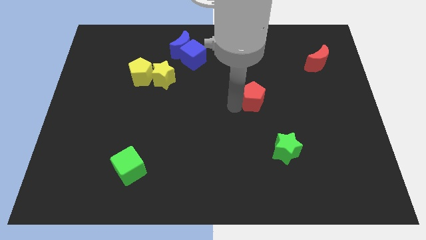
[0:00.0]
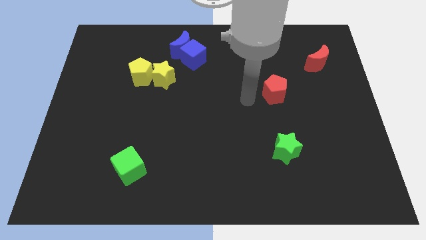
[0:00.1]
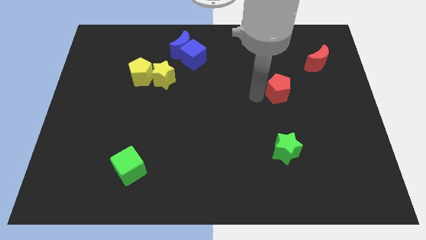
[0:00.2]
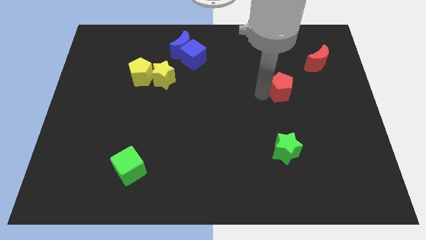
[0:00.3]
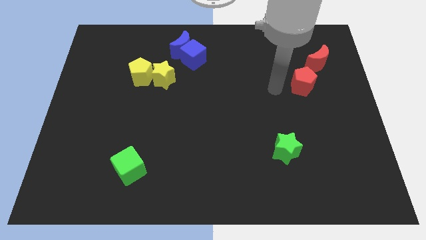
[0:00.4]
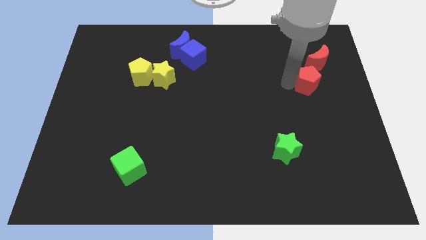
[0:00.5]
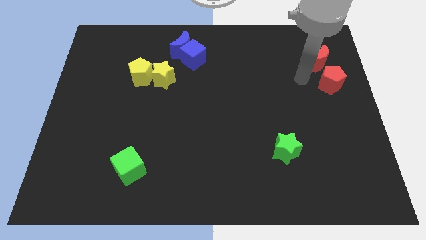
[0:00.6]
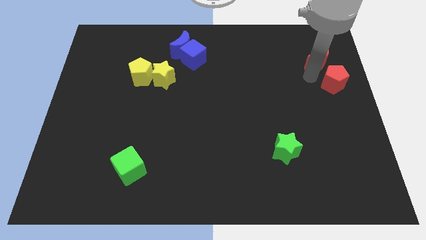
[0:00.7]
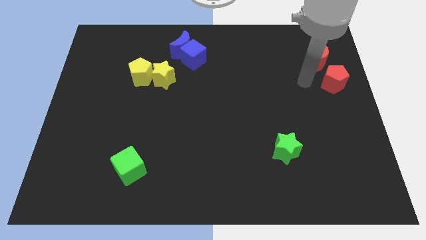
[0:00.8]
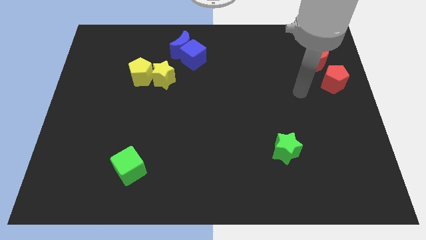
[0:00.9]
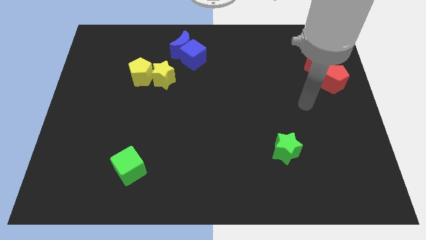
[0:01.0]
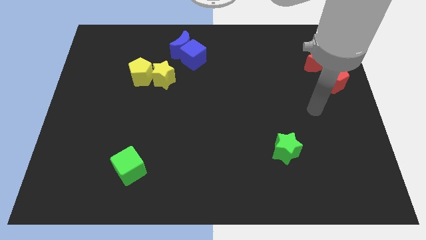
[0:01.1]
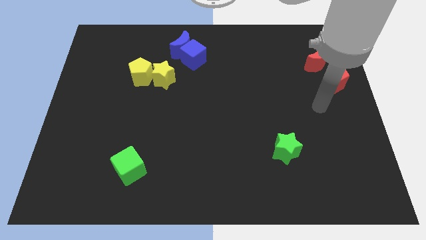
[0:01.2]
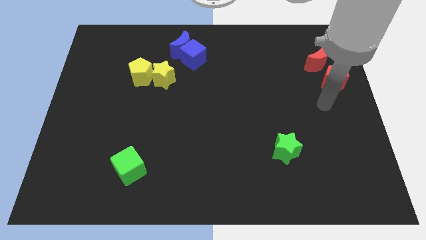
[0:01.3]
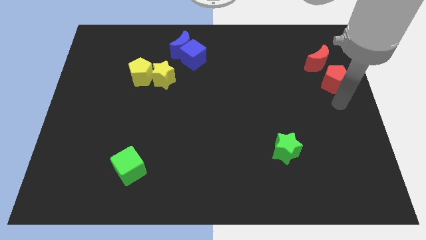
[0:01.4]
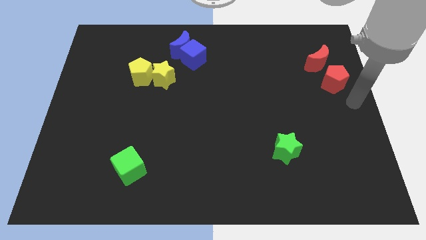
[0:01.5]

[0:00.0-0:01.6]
place the red pentagon below the red moon

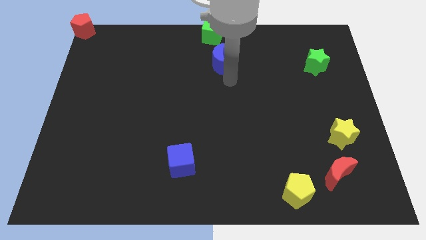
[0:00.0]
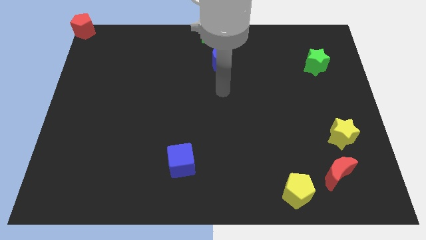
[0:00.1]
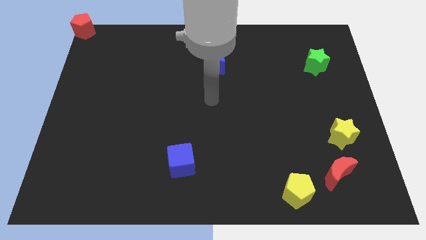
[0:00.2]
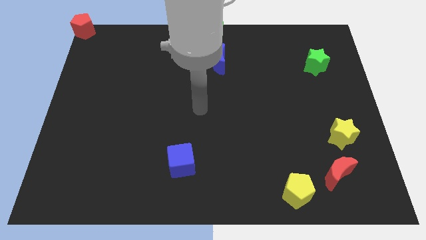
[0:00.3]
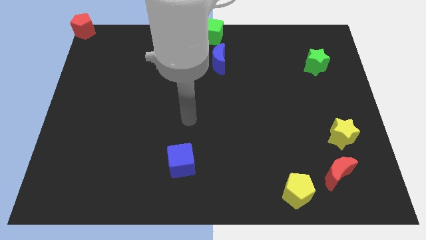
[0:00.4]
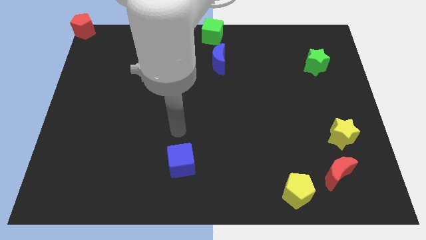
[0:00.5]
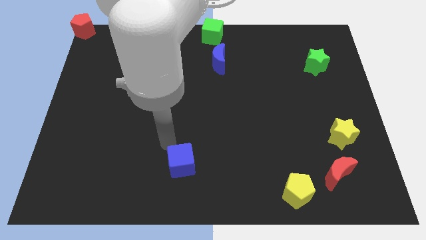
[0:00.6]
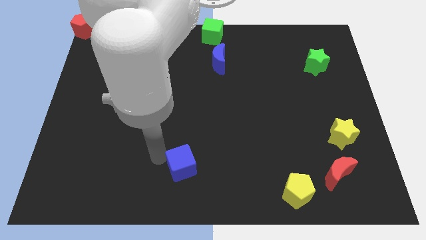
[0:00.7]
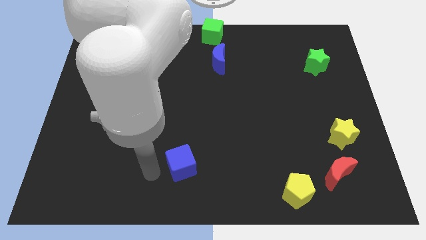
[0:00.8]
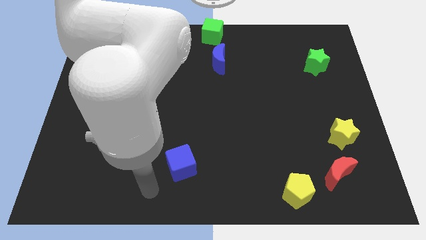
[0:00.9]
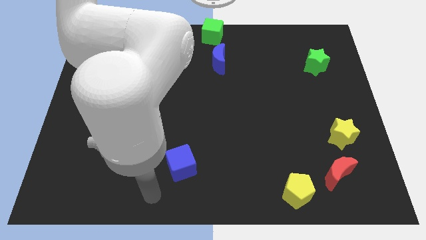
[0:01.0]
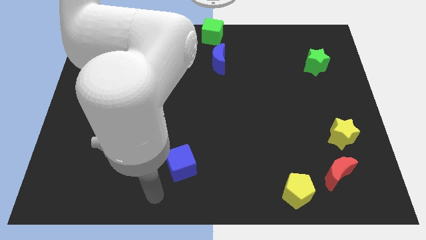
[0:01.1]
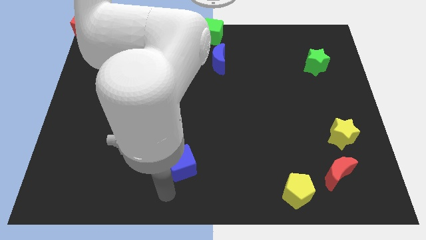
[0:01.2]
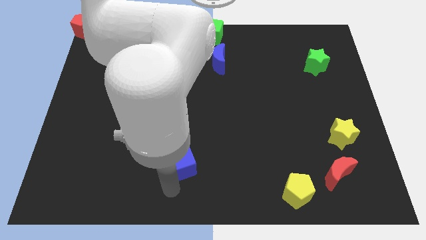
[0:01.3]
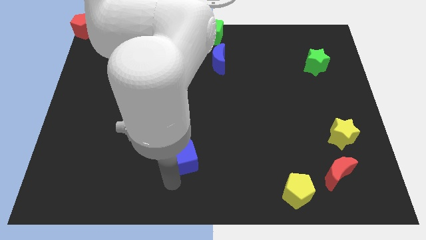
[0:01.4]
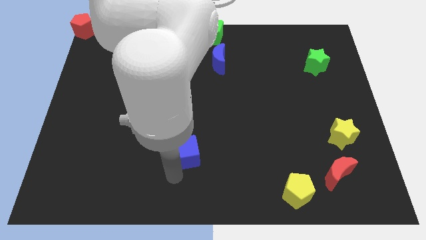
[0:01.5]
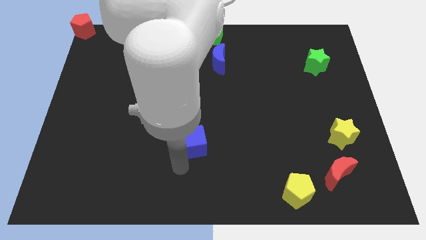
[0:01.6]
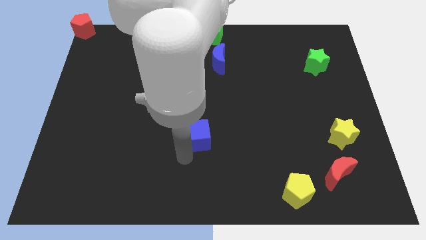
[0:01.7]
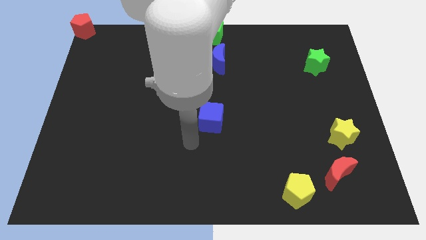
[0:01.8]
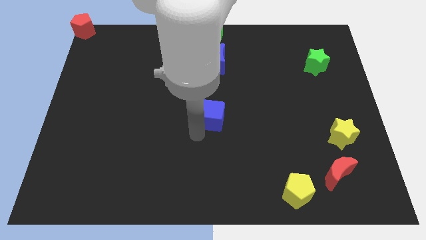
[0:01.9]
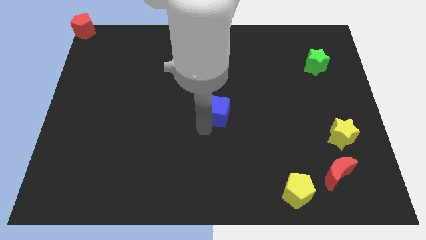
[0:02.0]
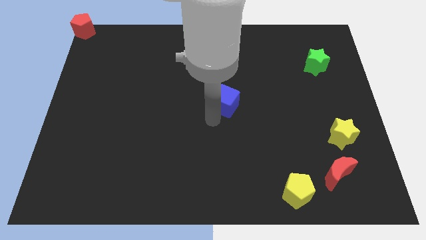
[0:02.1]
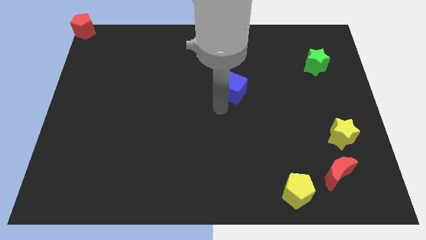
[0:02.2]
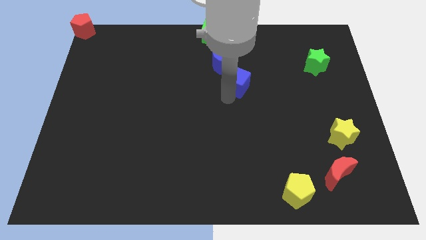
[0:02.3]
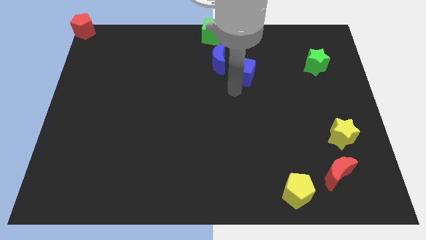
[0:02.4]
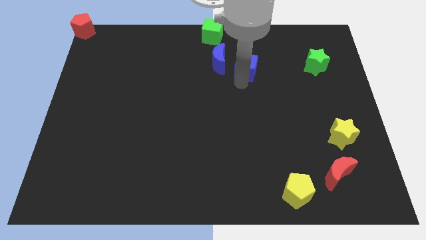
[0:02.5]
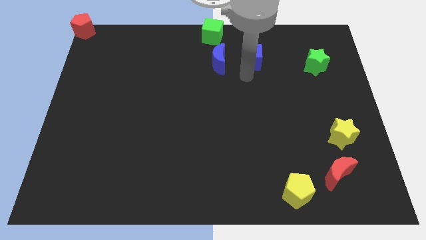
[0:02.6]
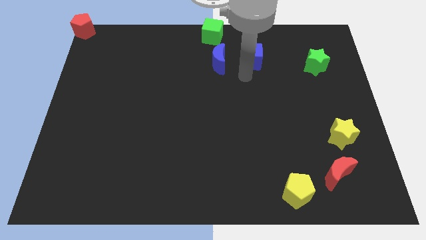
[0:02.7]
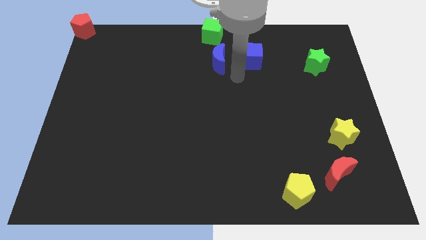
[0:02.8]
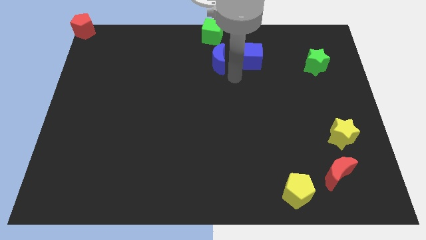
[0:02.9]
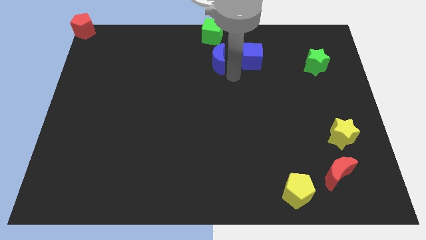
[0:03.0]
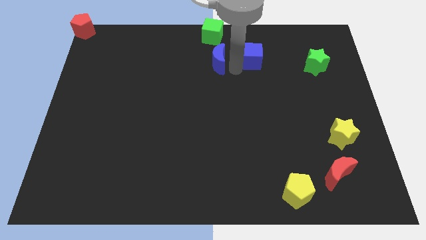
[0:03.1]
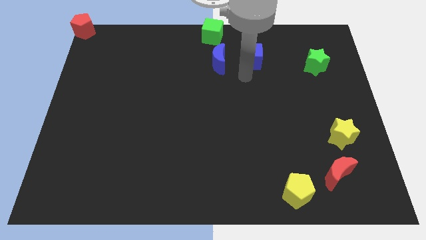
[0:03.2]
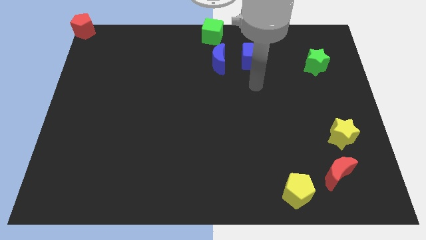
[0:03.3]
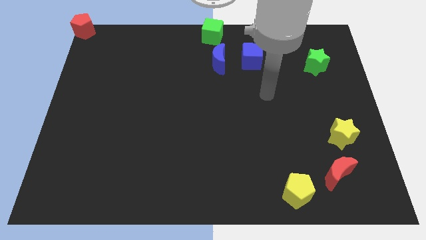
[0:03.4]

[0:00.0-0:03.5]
place the blue cube right to the blue crescent

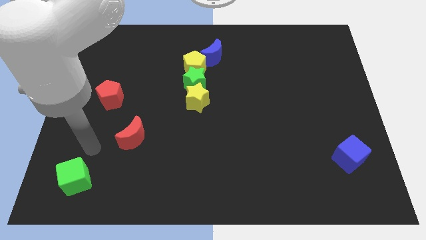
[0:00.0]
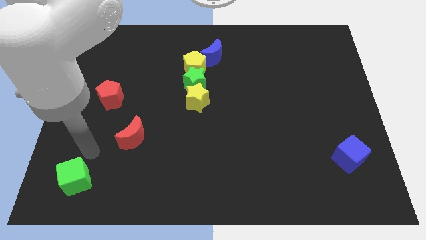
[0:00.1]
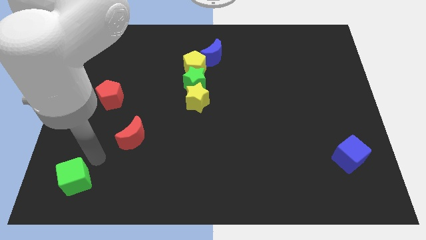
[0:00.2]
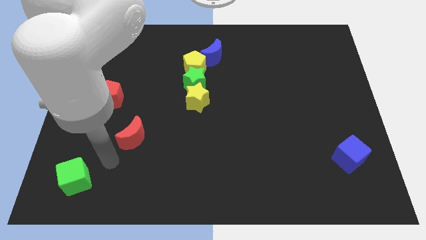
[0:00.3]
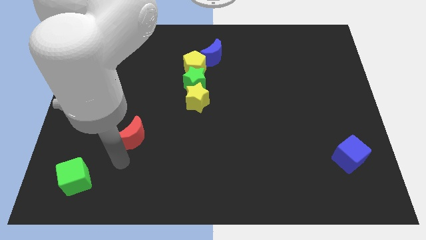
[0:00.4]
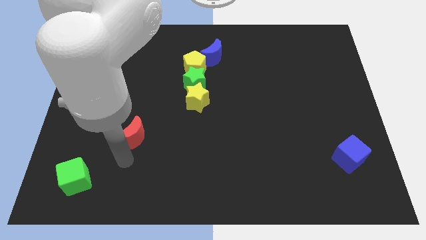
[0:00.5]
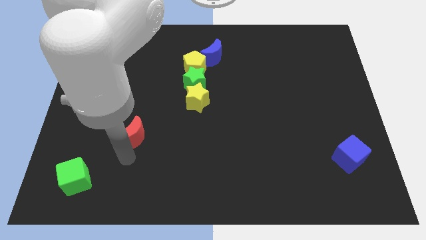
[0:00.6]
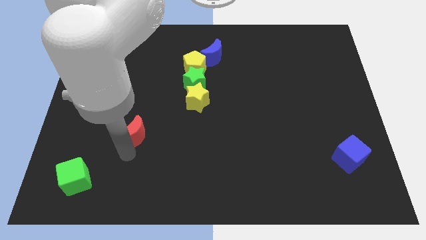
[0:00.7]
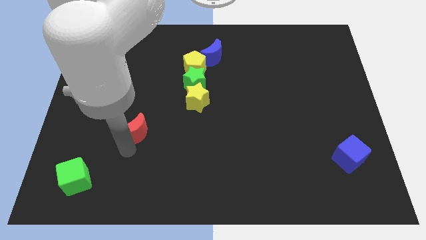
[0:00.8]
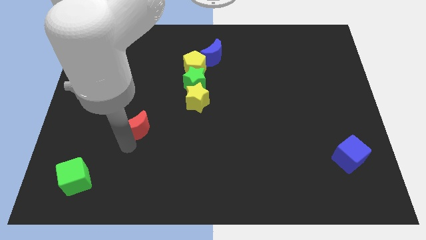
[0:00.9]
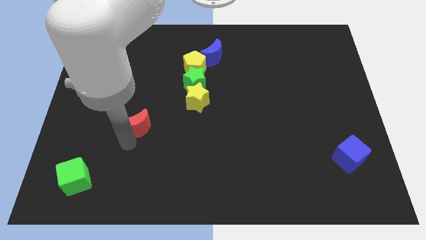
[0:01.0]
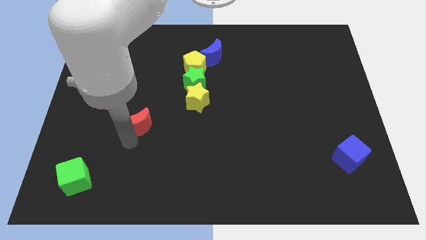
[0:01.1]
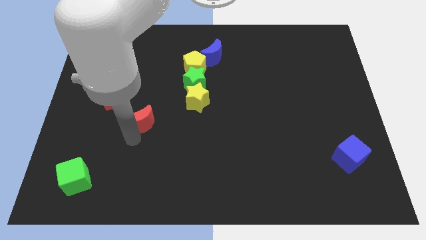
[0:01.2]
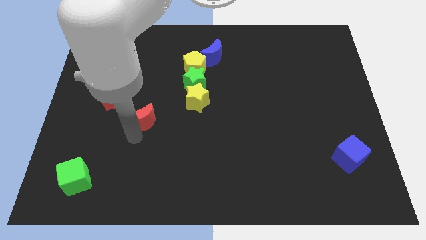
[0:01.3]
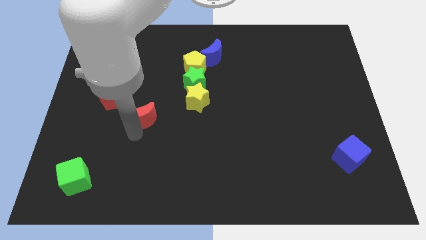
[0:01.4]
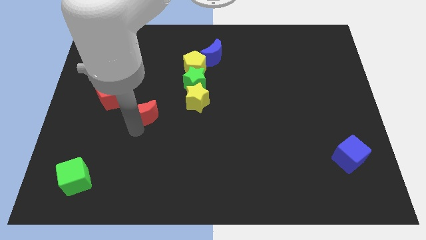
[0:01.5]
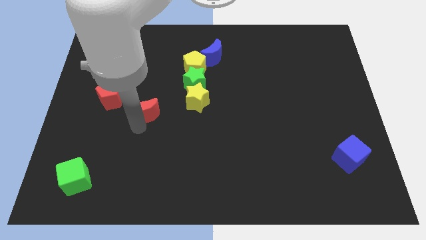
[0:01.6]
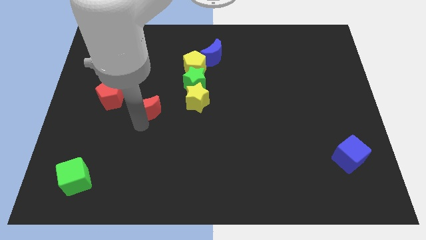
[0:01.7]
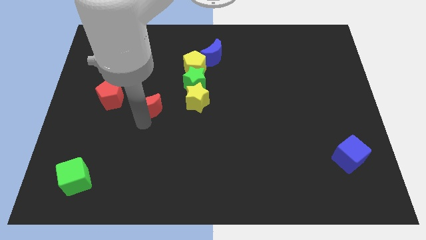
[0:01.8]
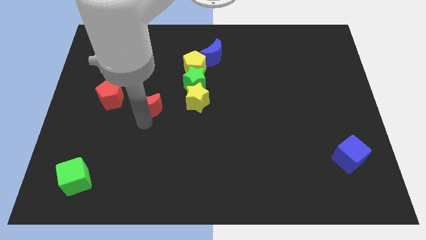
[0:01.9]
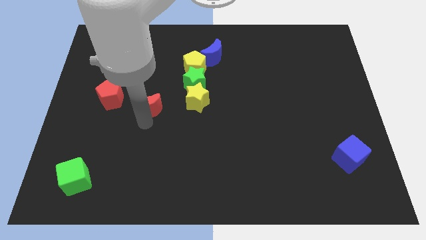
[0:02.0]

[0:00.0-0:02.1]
push the red moon in between the yellow star and red pentagon

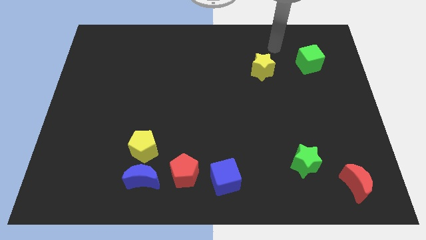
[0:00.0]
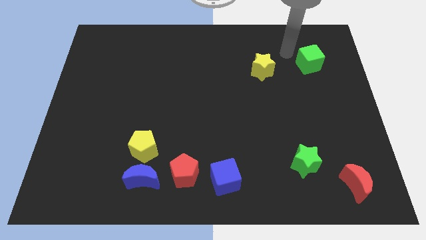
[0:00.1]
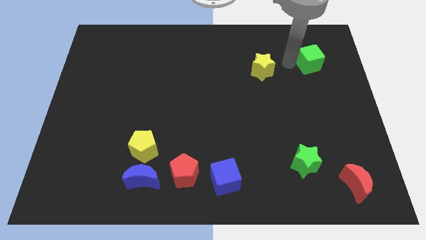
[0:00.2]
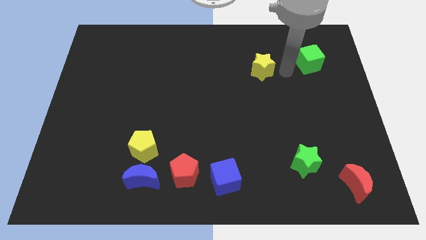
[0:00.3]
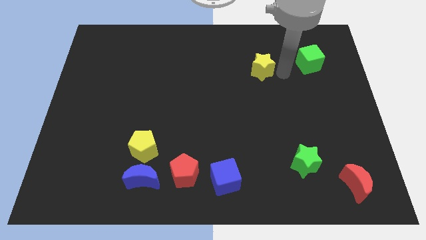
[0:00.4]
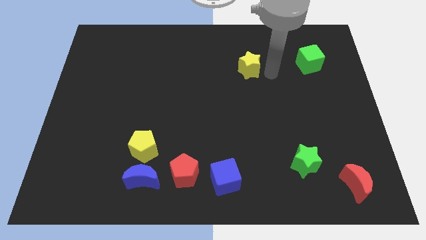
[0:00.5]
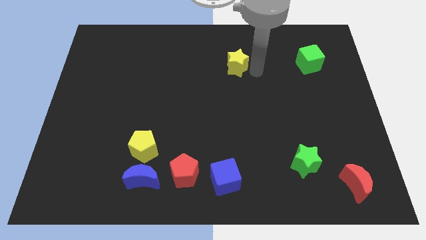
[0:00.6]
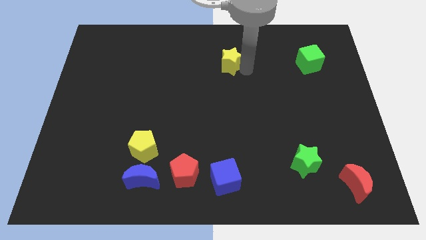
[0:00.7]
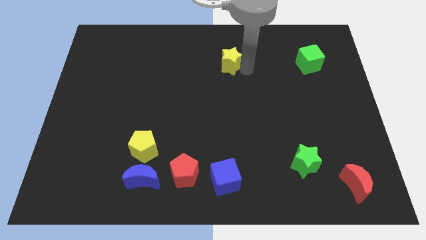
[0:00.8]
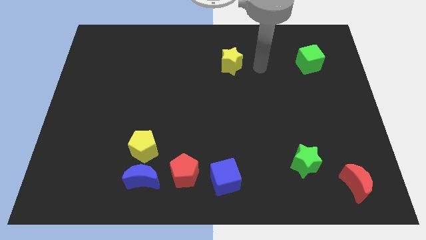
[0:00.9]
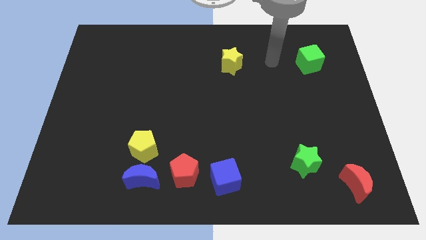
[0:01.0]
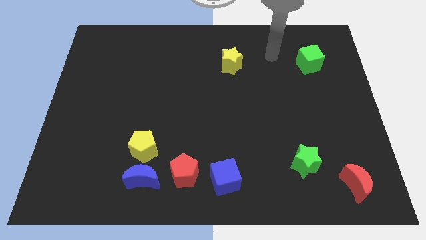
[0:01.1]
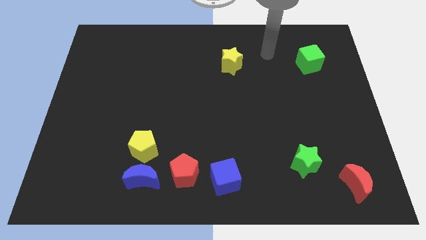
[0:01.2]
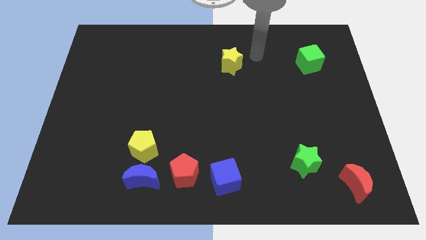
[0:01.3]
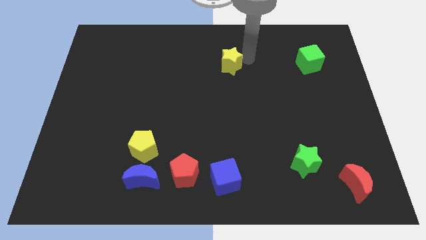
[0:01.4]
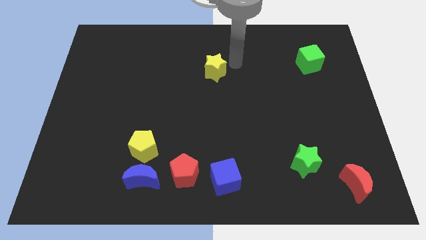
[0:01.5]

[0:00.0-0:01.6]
push the yellow star to the vertically above the blue cube
